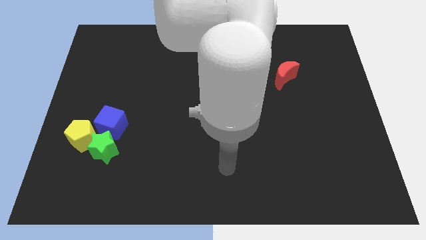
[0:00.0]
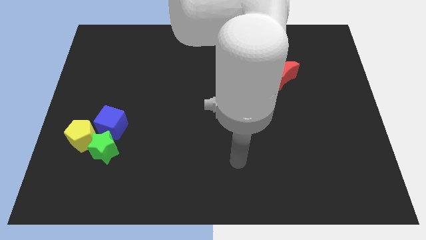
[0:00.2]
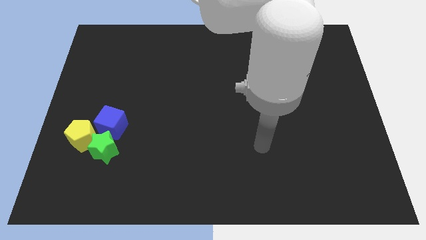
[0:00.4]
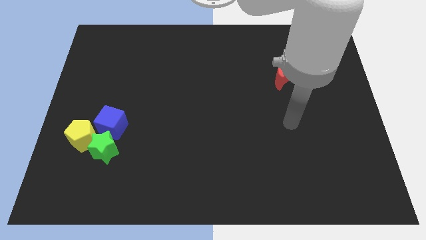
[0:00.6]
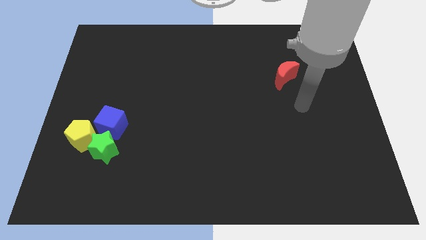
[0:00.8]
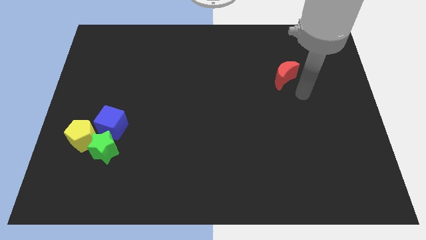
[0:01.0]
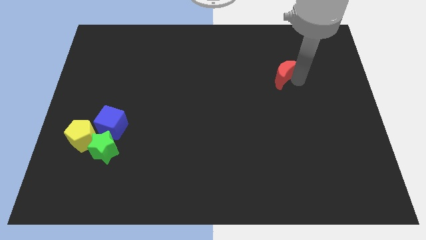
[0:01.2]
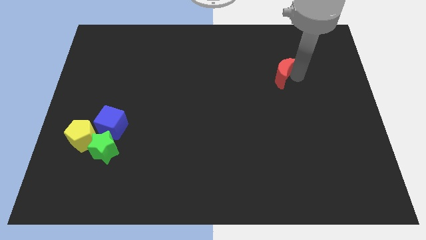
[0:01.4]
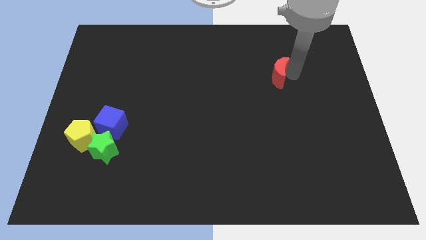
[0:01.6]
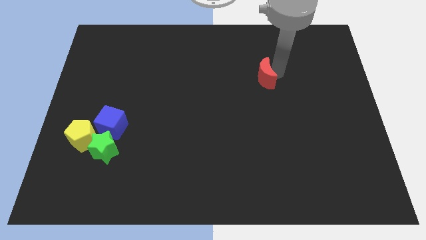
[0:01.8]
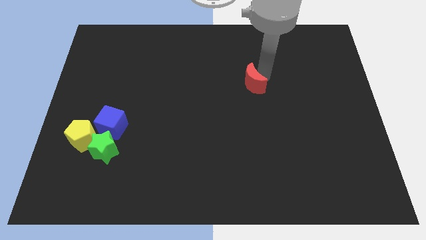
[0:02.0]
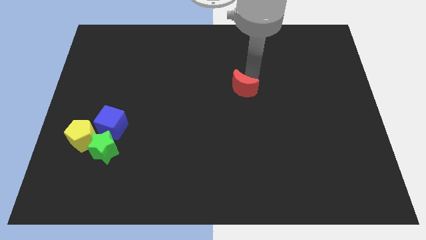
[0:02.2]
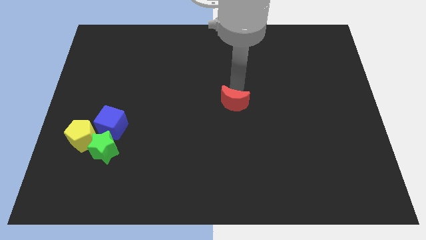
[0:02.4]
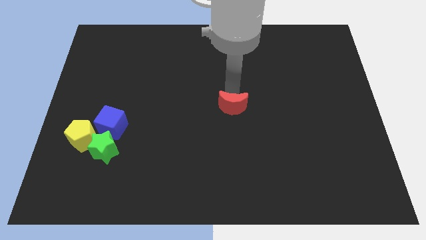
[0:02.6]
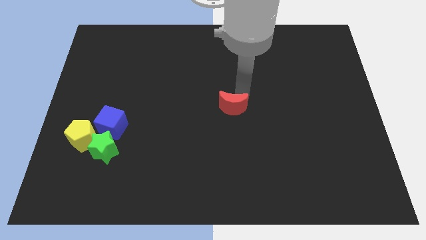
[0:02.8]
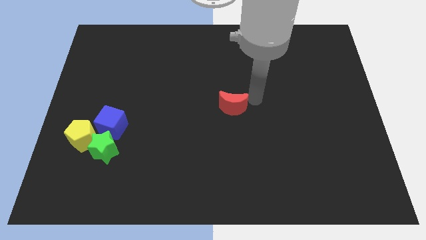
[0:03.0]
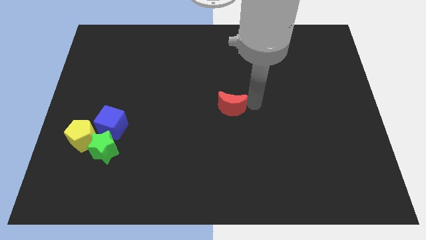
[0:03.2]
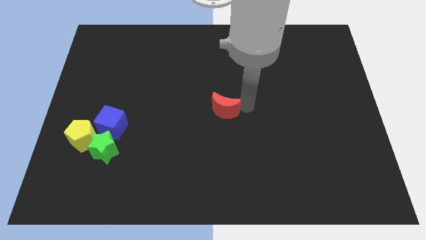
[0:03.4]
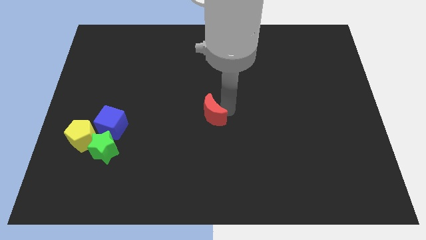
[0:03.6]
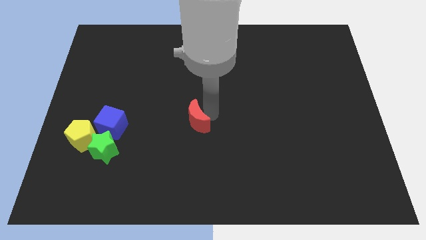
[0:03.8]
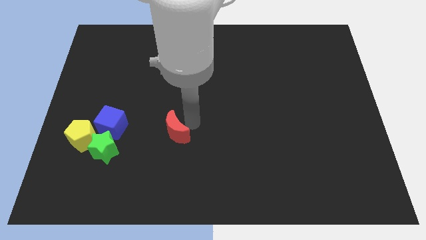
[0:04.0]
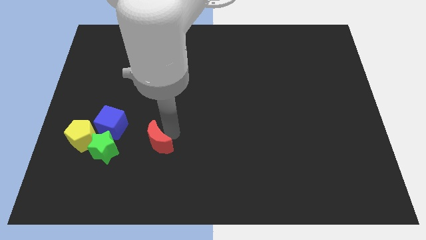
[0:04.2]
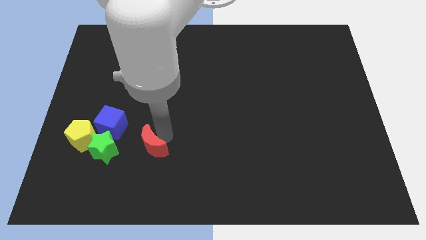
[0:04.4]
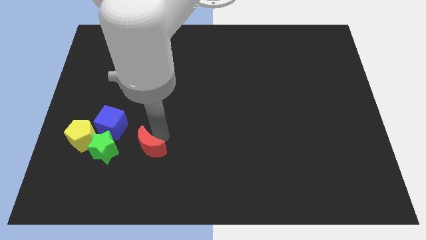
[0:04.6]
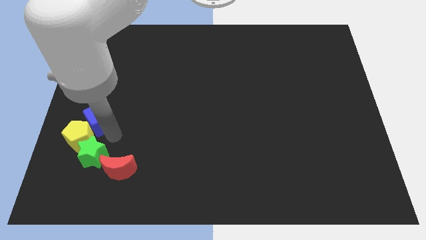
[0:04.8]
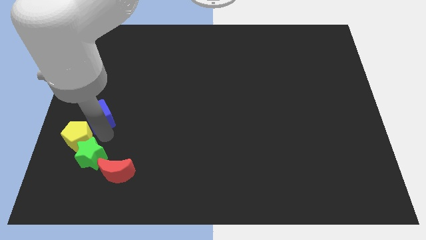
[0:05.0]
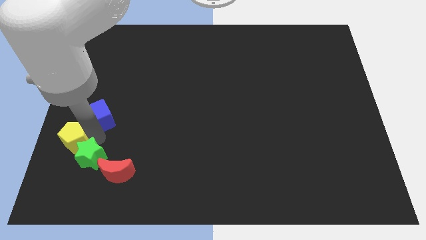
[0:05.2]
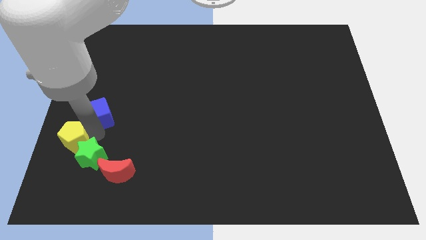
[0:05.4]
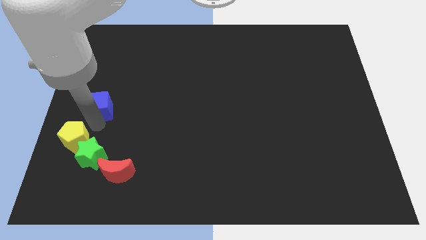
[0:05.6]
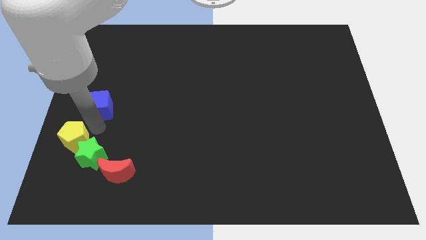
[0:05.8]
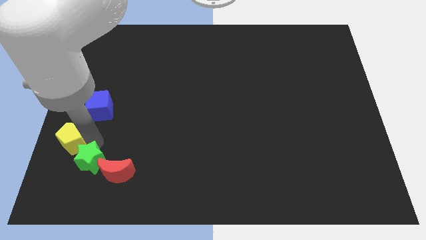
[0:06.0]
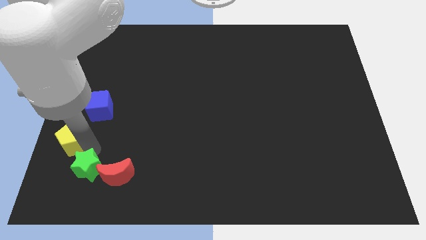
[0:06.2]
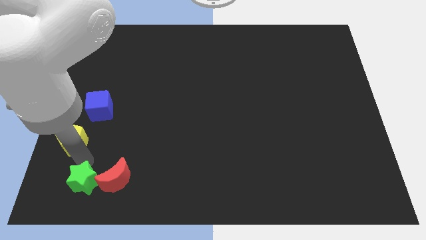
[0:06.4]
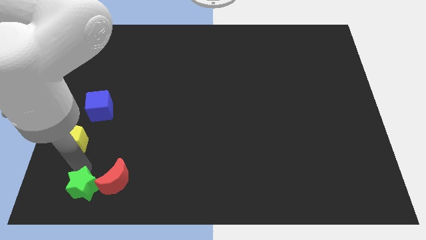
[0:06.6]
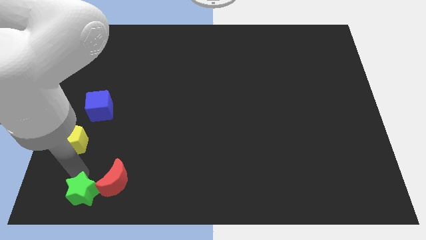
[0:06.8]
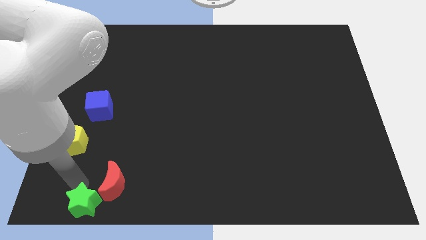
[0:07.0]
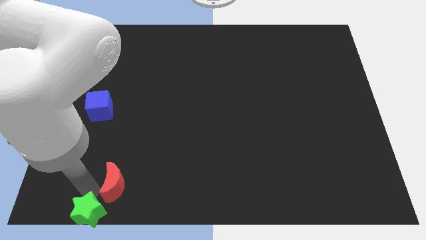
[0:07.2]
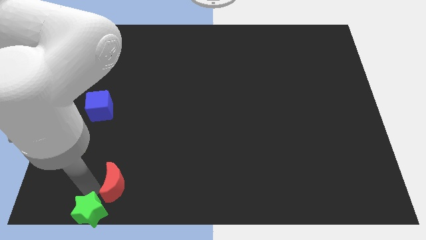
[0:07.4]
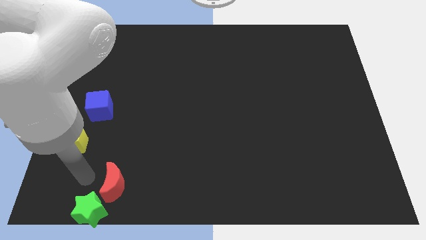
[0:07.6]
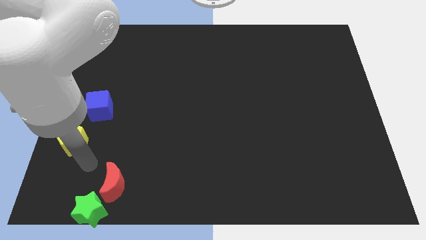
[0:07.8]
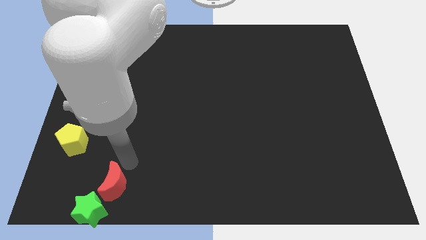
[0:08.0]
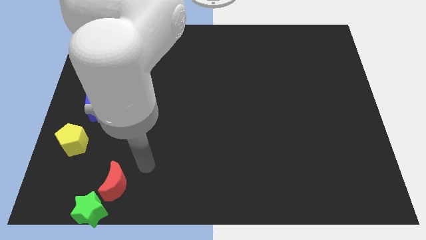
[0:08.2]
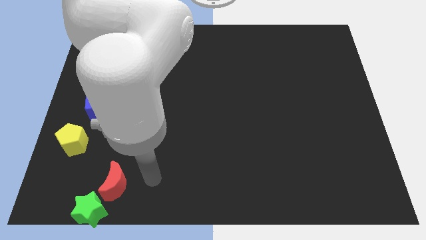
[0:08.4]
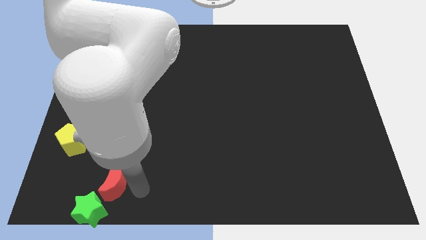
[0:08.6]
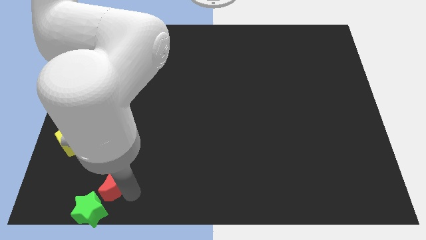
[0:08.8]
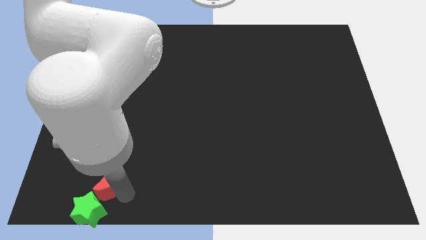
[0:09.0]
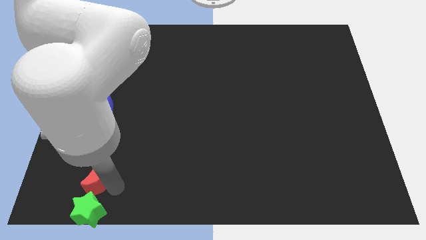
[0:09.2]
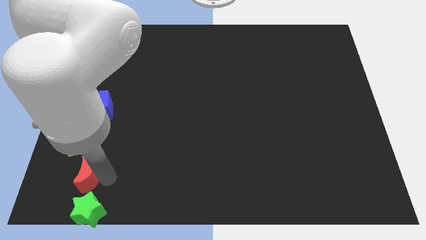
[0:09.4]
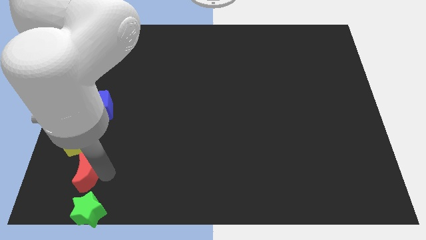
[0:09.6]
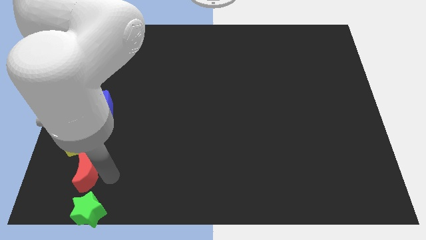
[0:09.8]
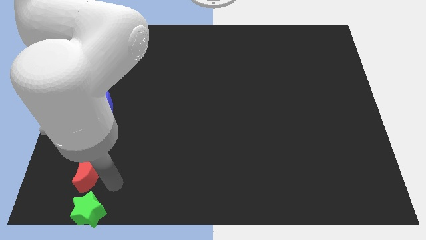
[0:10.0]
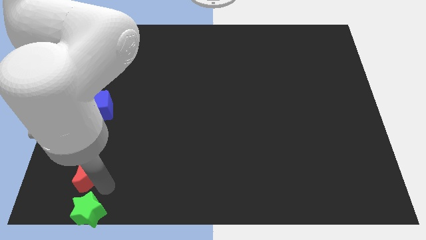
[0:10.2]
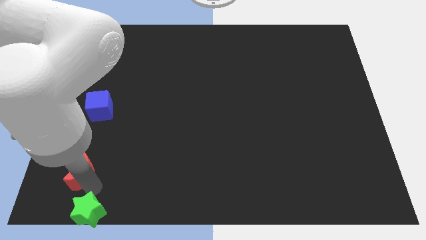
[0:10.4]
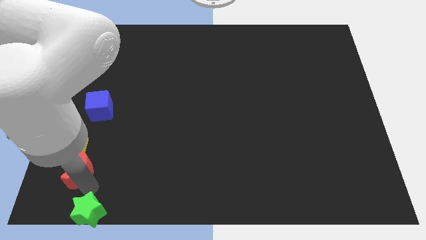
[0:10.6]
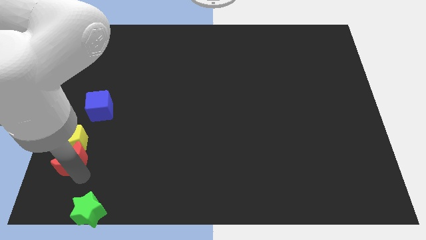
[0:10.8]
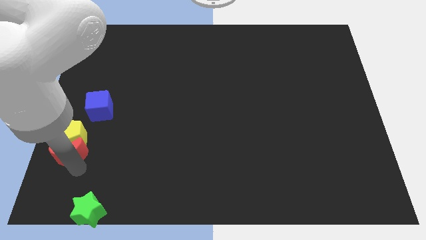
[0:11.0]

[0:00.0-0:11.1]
put the red moon next to the yellow pentagon

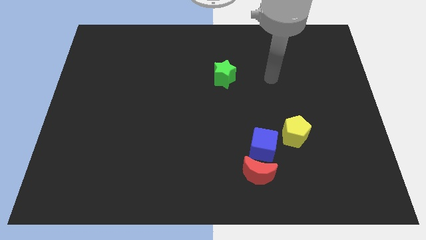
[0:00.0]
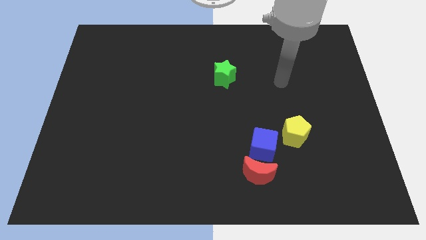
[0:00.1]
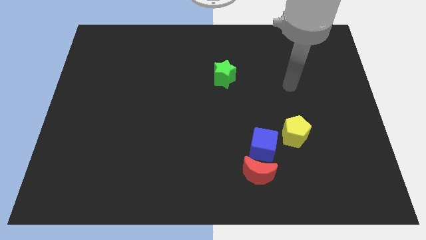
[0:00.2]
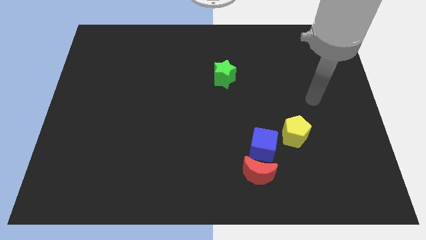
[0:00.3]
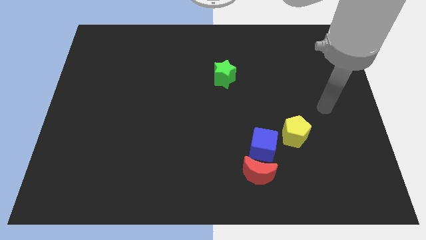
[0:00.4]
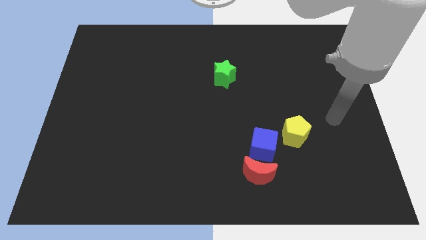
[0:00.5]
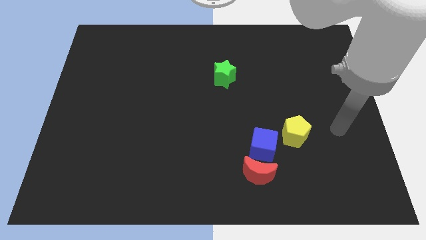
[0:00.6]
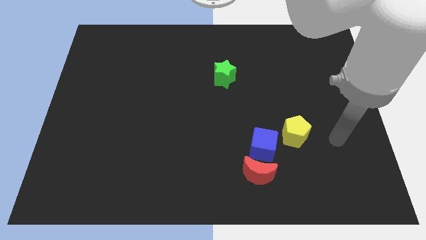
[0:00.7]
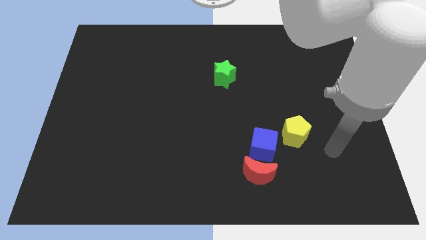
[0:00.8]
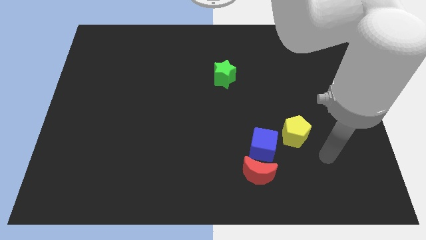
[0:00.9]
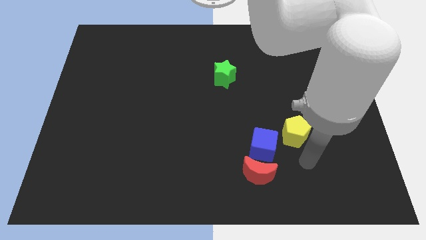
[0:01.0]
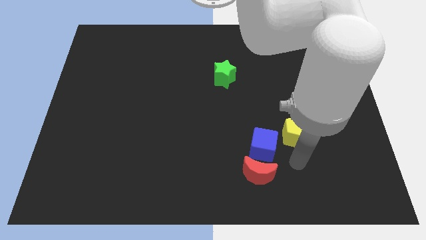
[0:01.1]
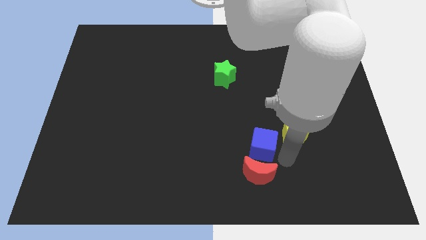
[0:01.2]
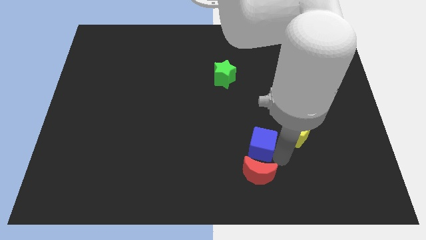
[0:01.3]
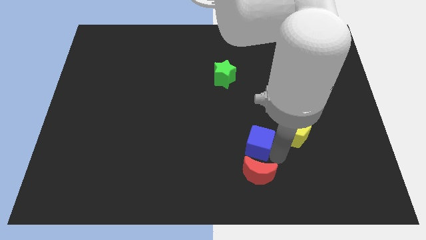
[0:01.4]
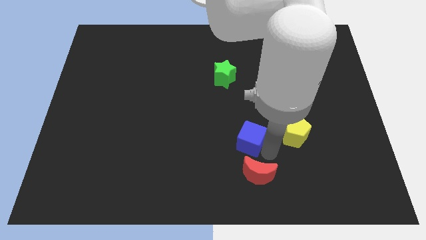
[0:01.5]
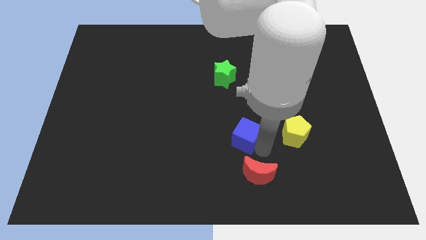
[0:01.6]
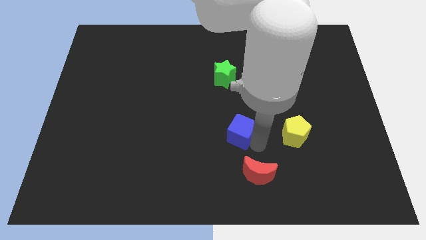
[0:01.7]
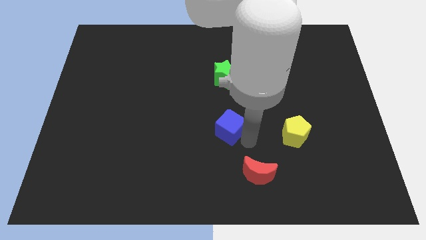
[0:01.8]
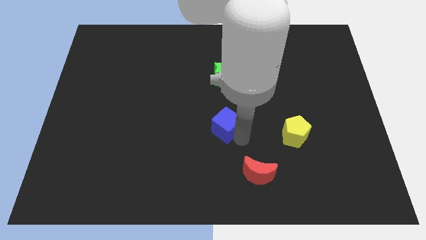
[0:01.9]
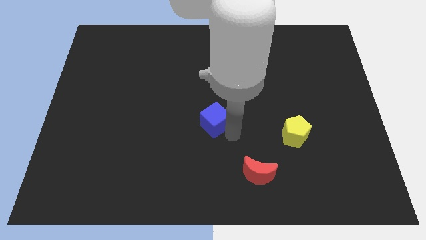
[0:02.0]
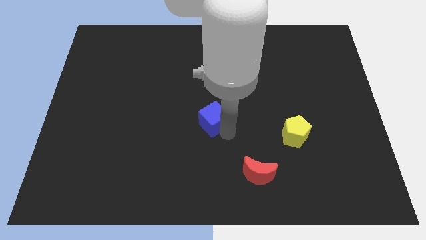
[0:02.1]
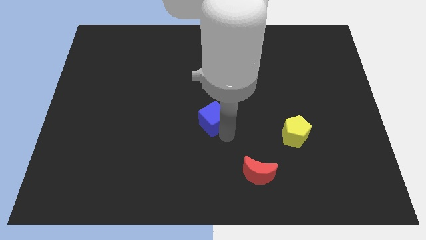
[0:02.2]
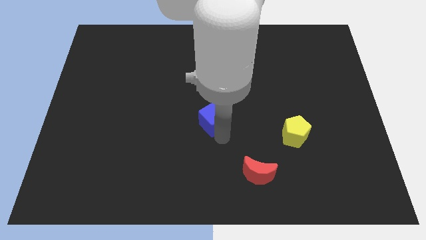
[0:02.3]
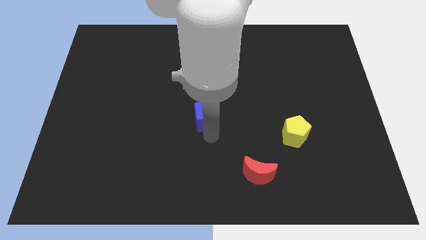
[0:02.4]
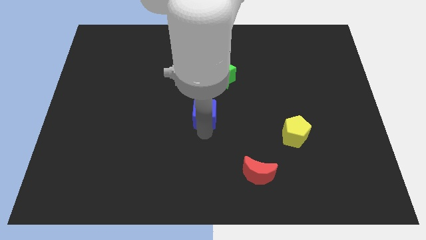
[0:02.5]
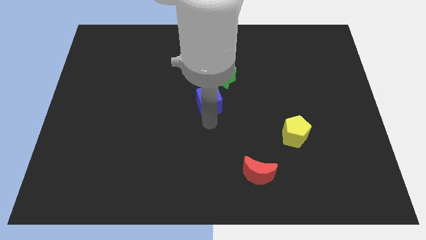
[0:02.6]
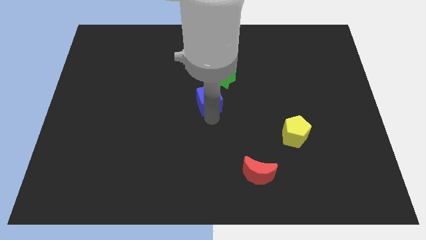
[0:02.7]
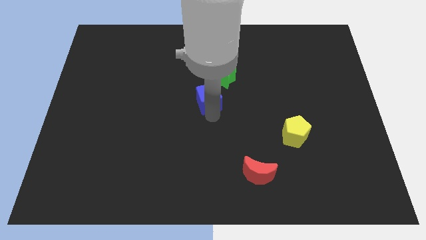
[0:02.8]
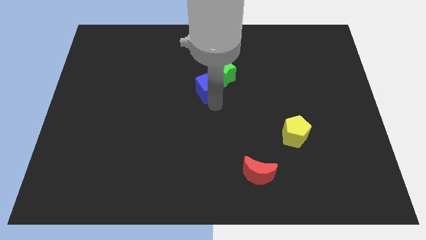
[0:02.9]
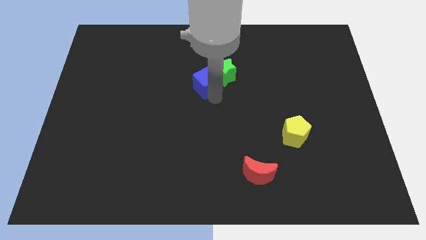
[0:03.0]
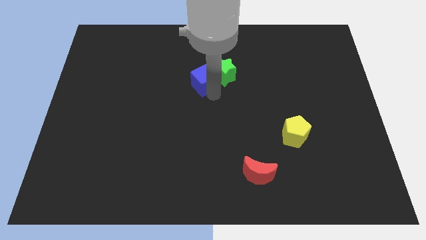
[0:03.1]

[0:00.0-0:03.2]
put the blue cube to the green star
